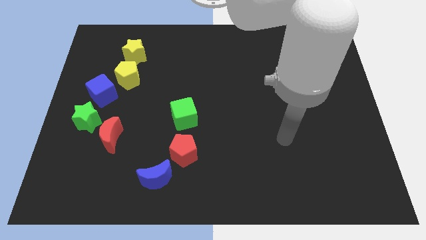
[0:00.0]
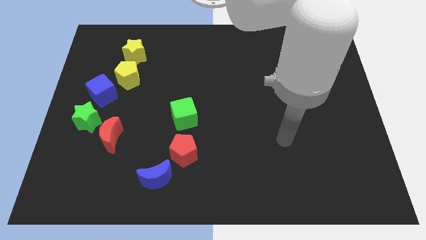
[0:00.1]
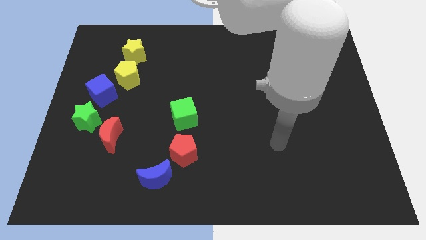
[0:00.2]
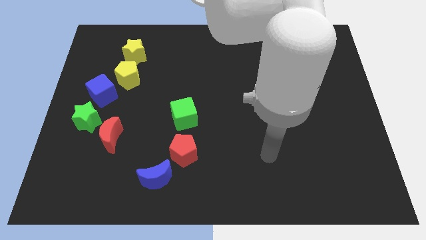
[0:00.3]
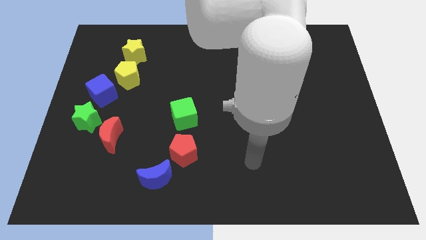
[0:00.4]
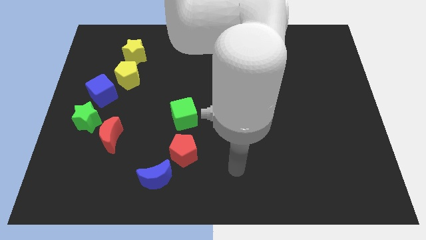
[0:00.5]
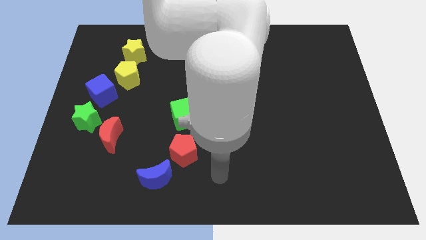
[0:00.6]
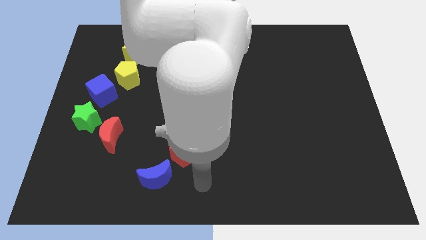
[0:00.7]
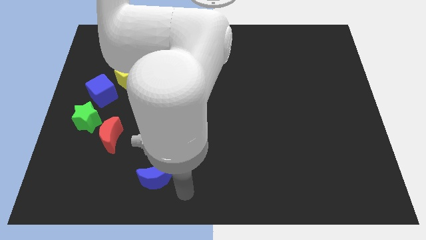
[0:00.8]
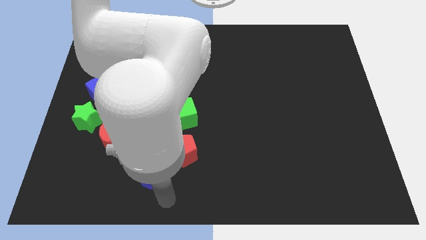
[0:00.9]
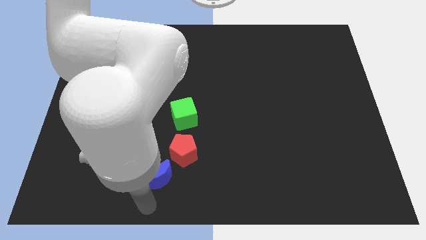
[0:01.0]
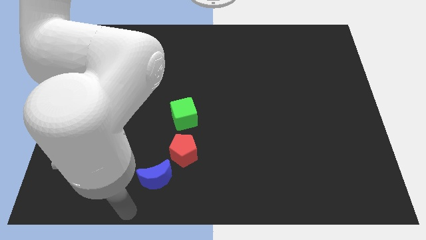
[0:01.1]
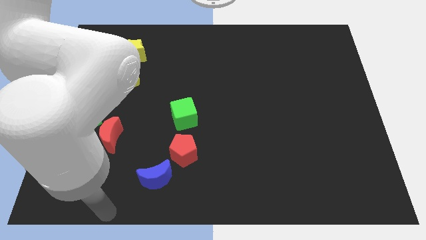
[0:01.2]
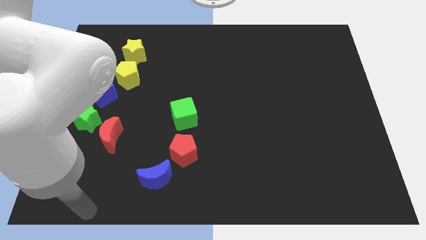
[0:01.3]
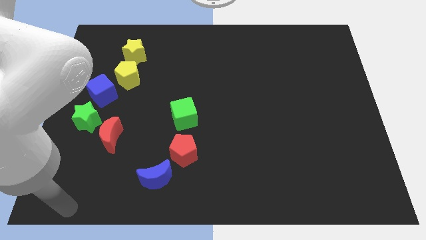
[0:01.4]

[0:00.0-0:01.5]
move your arm close to the blue moon

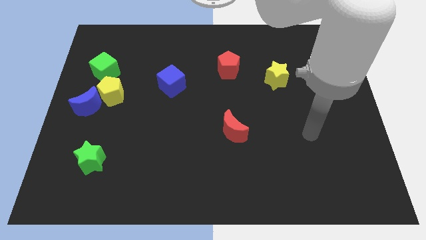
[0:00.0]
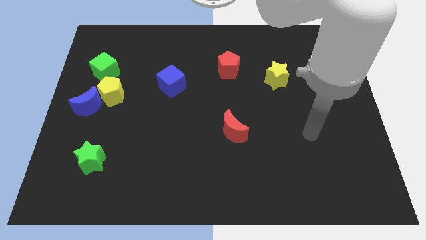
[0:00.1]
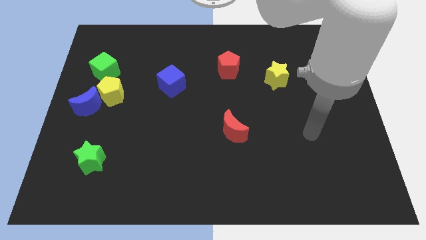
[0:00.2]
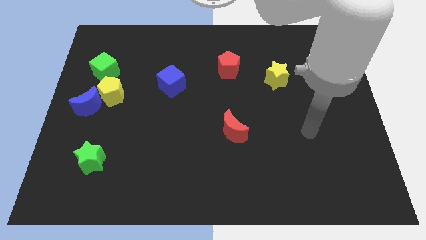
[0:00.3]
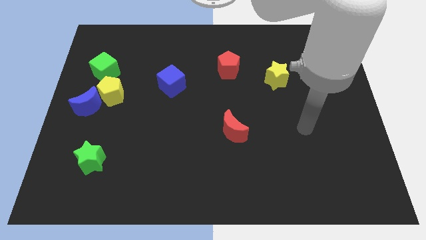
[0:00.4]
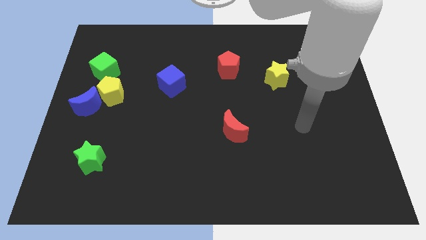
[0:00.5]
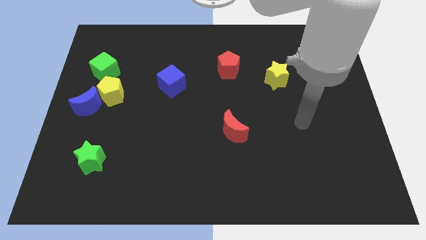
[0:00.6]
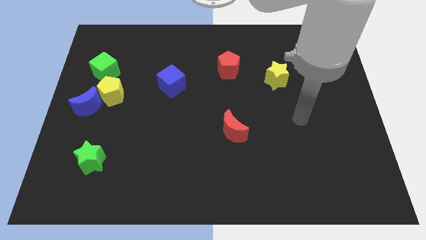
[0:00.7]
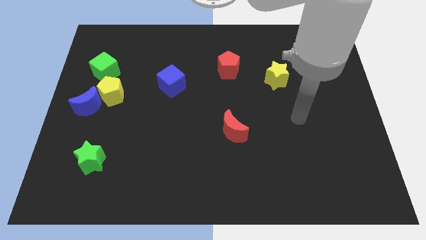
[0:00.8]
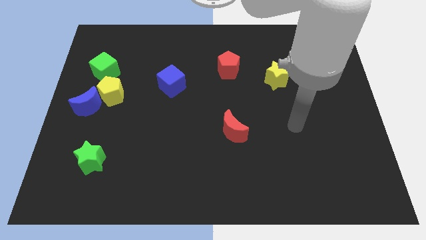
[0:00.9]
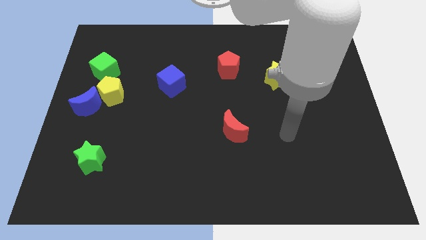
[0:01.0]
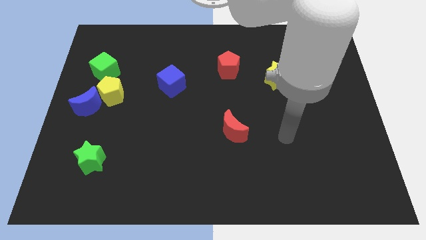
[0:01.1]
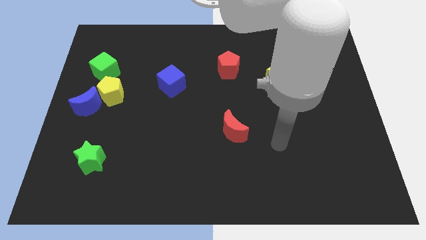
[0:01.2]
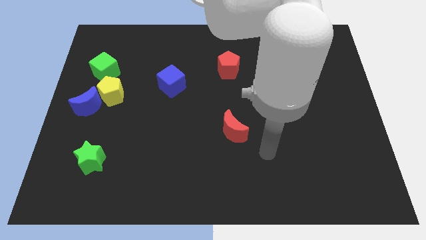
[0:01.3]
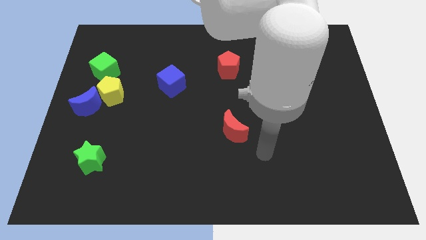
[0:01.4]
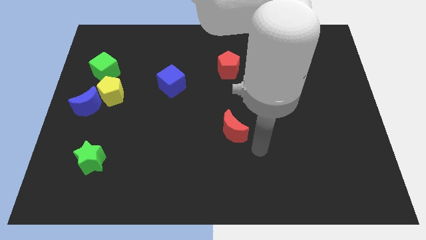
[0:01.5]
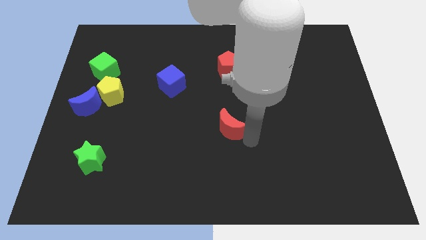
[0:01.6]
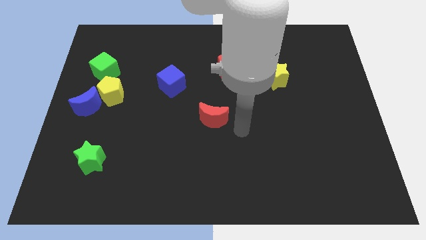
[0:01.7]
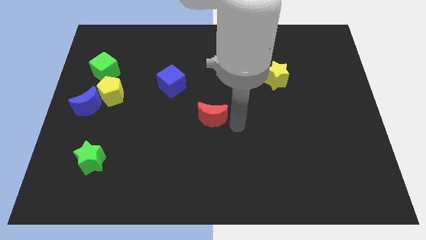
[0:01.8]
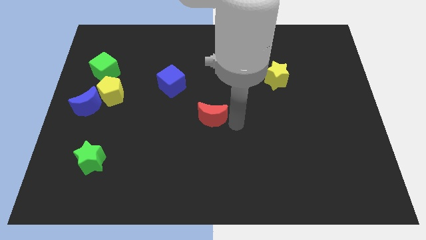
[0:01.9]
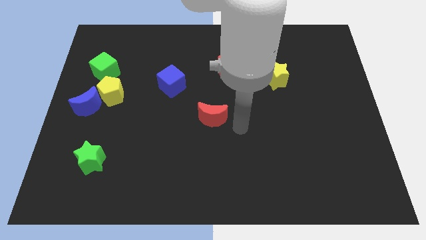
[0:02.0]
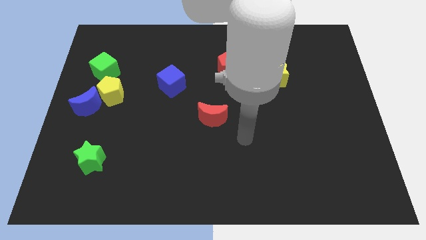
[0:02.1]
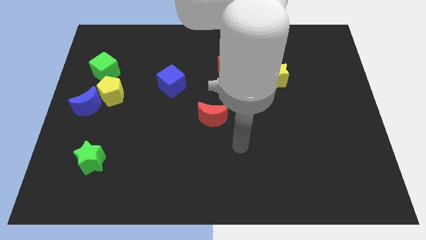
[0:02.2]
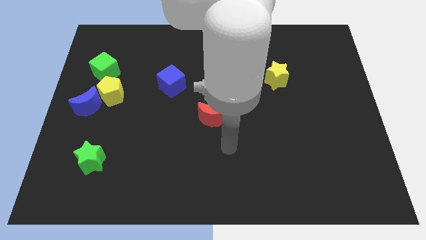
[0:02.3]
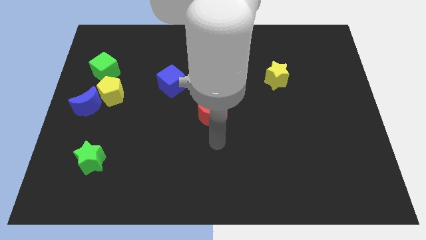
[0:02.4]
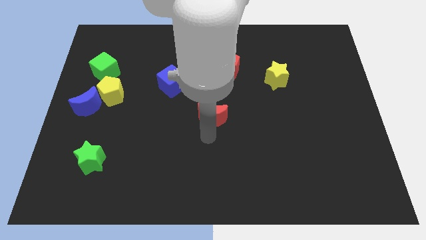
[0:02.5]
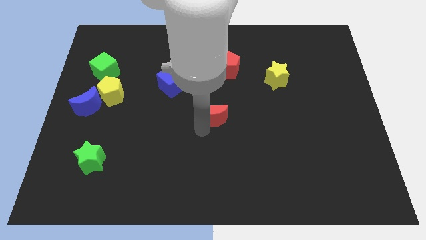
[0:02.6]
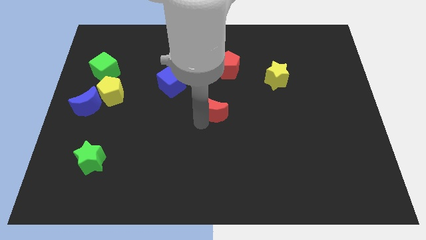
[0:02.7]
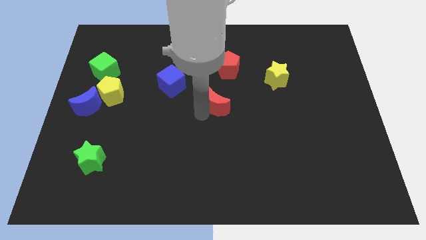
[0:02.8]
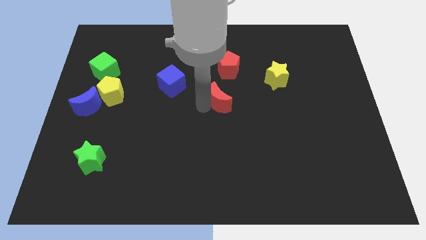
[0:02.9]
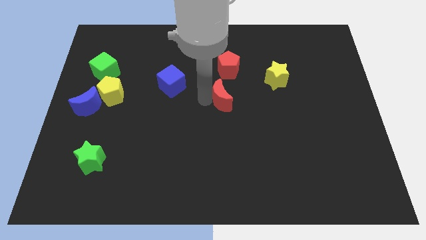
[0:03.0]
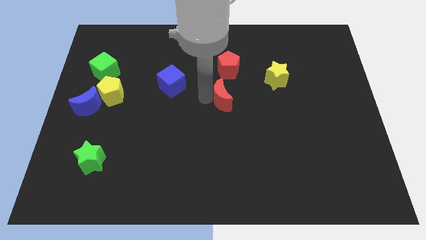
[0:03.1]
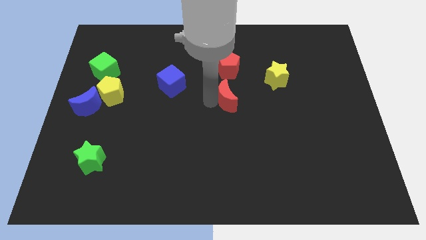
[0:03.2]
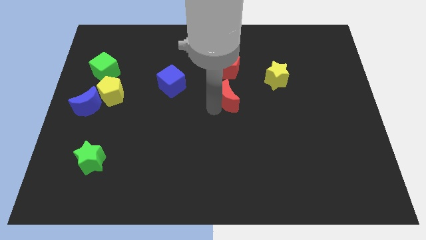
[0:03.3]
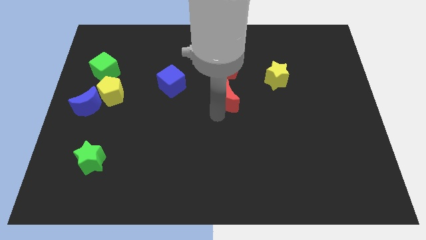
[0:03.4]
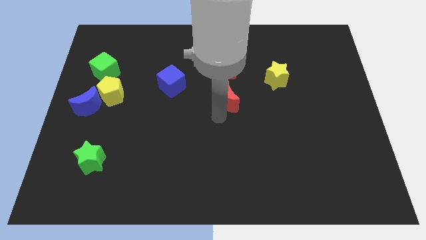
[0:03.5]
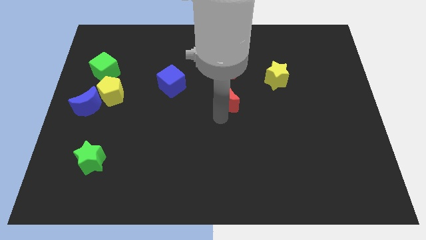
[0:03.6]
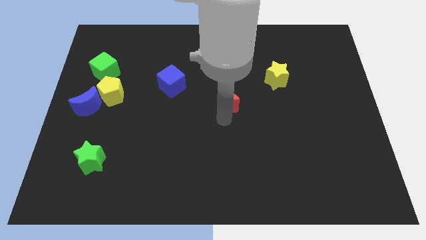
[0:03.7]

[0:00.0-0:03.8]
move red crescent towards the red pentagon

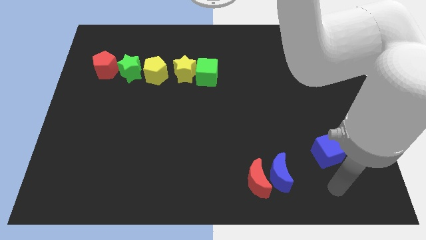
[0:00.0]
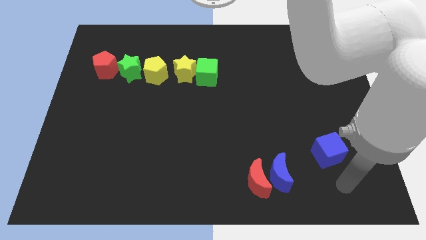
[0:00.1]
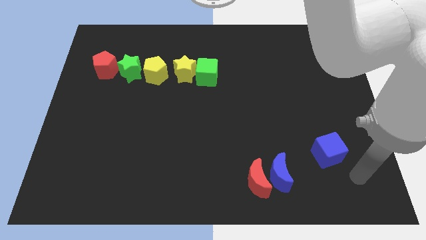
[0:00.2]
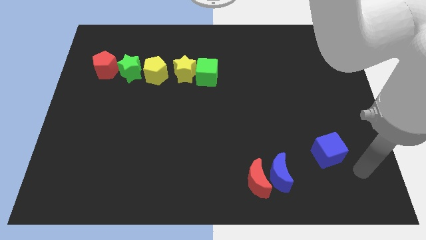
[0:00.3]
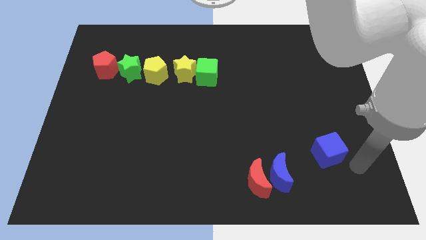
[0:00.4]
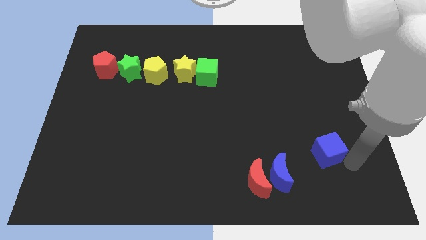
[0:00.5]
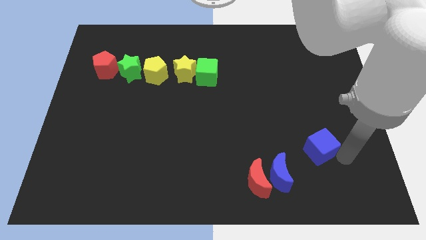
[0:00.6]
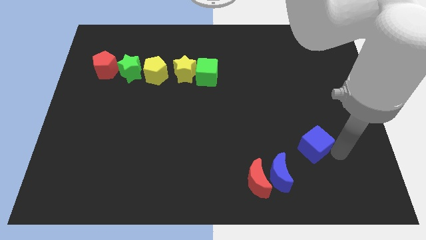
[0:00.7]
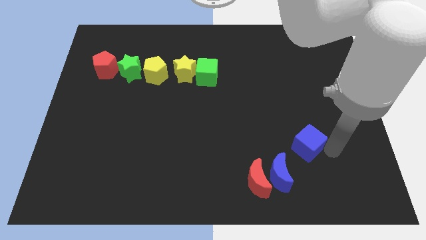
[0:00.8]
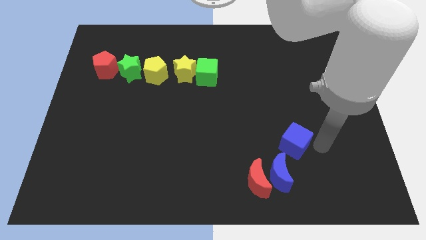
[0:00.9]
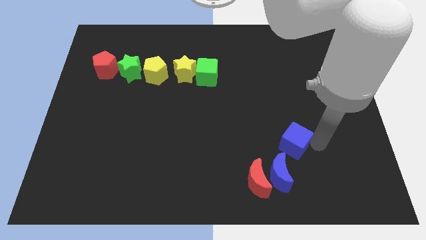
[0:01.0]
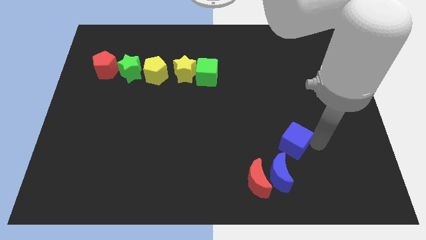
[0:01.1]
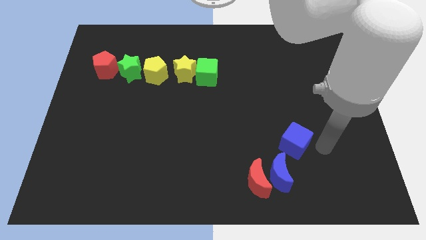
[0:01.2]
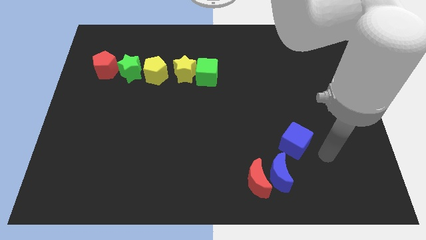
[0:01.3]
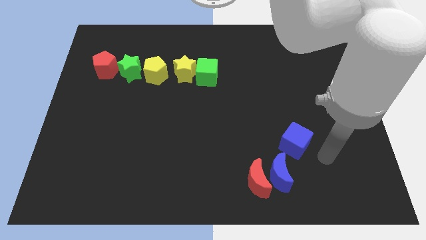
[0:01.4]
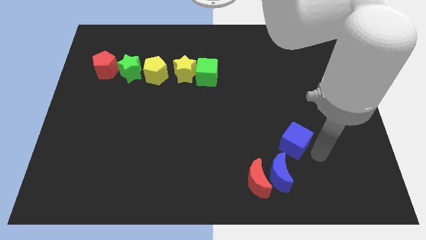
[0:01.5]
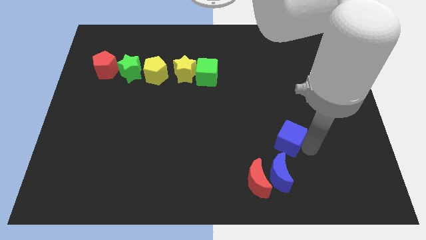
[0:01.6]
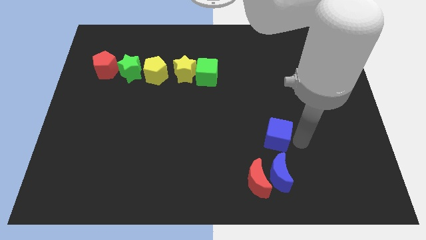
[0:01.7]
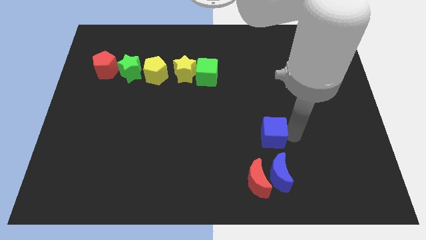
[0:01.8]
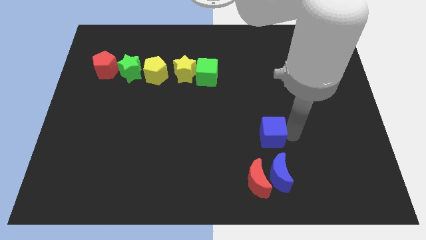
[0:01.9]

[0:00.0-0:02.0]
place the blue cube above the blue crescent

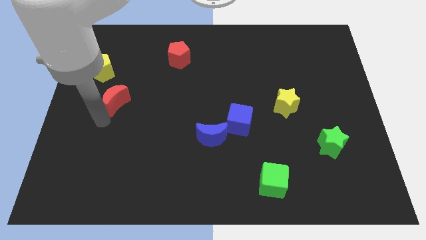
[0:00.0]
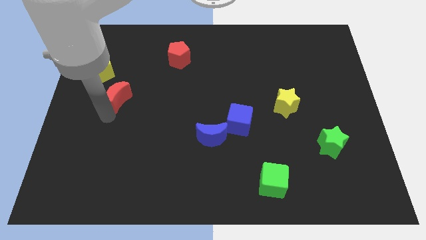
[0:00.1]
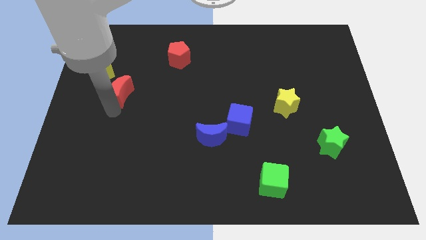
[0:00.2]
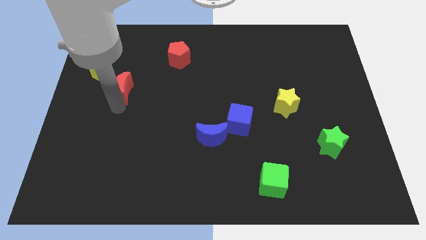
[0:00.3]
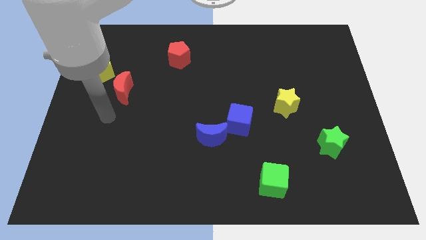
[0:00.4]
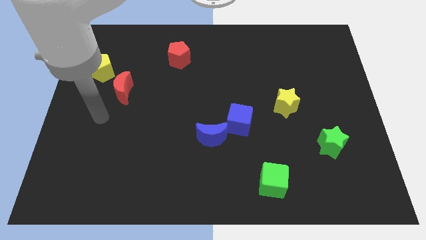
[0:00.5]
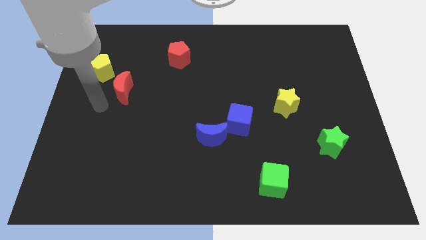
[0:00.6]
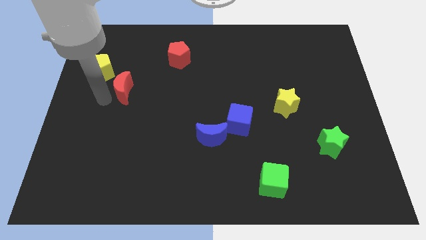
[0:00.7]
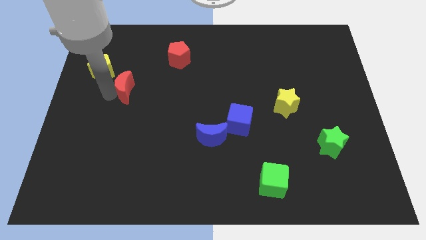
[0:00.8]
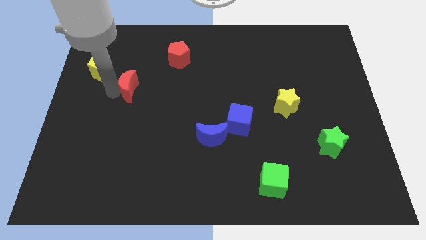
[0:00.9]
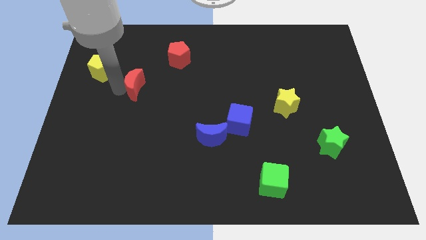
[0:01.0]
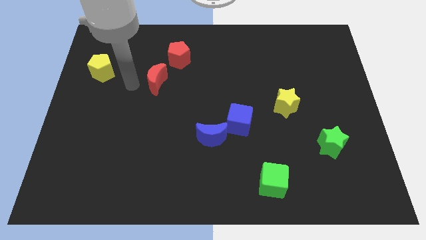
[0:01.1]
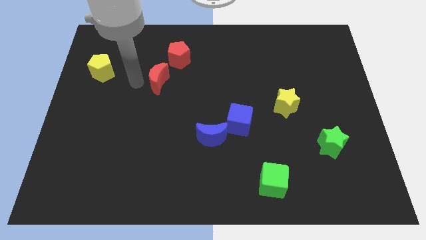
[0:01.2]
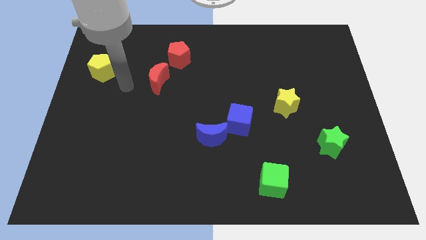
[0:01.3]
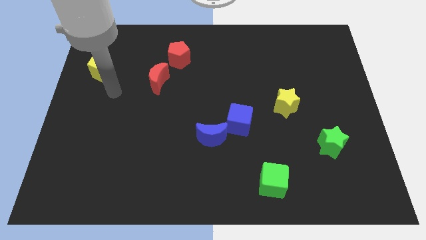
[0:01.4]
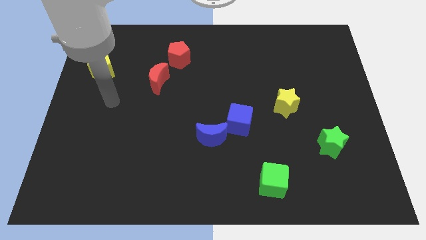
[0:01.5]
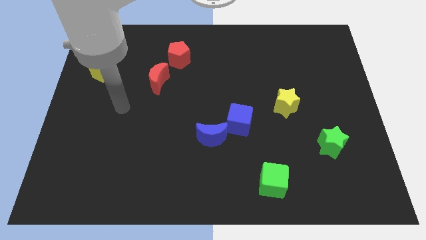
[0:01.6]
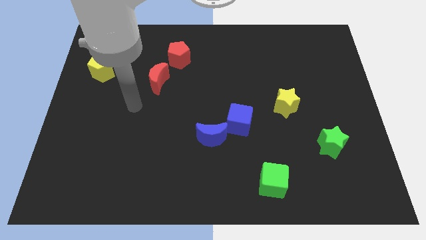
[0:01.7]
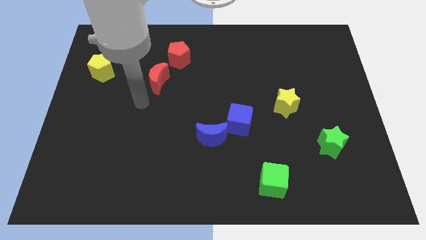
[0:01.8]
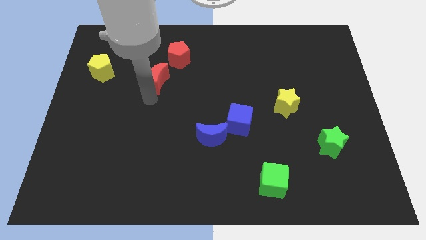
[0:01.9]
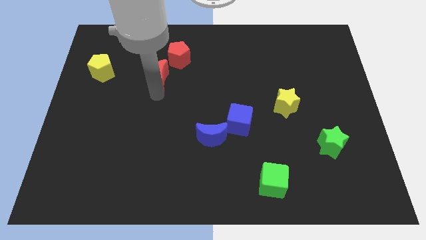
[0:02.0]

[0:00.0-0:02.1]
place red moon to the right of yellow pentagon
